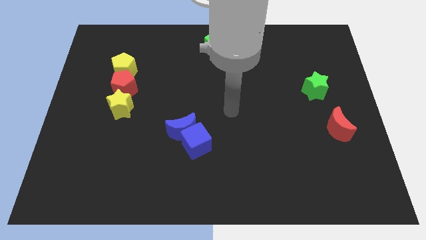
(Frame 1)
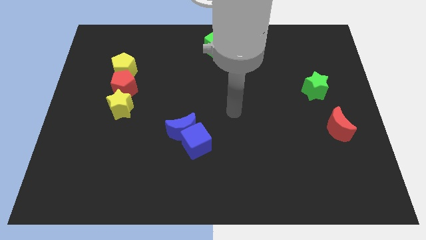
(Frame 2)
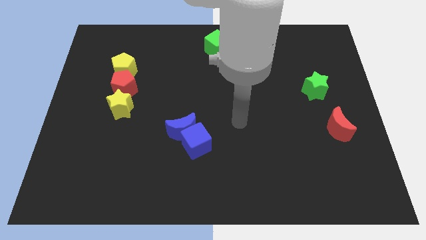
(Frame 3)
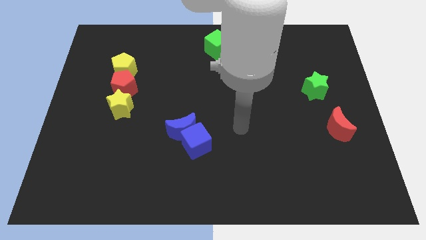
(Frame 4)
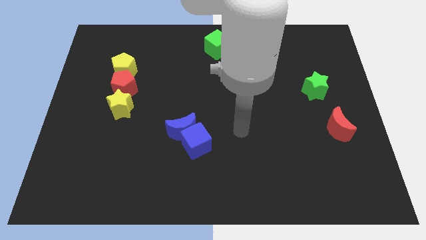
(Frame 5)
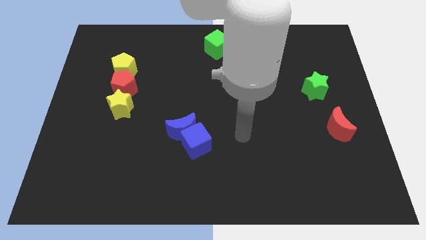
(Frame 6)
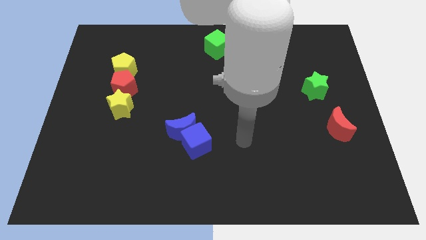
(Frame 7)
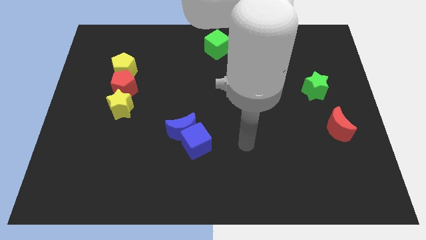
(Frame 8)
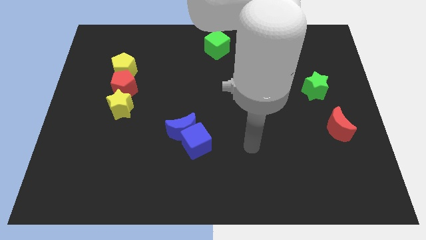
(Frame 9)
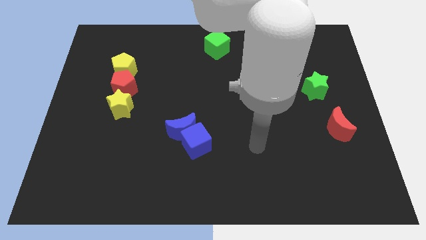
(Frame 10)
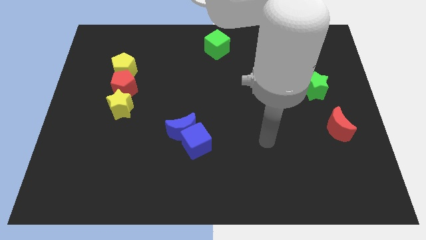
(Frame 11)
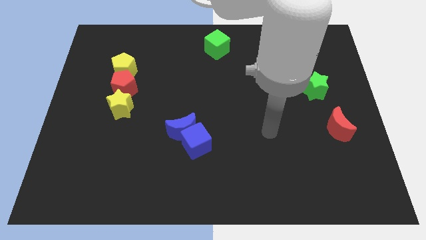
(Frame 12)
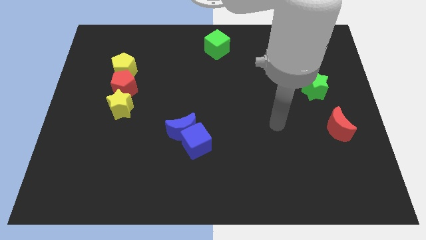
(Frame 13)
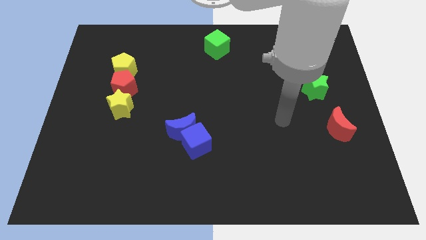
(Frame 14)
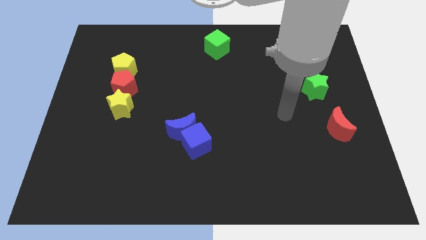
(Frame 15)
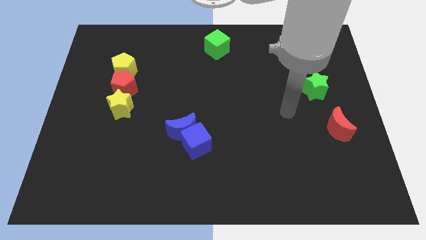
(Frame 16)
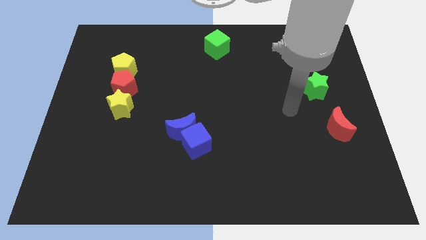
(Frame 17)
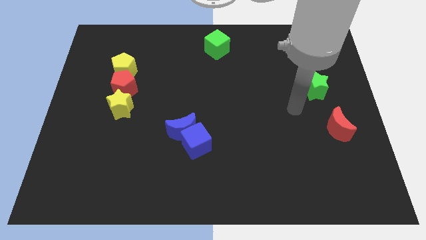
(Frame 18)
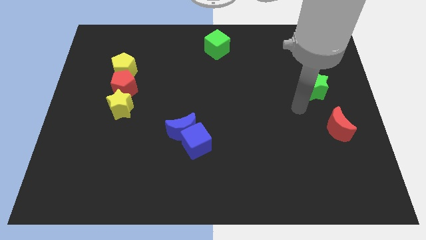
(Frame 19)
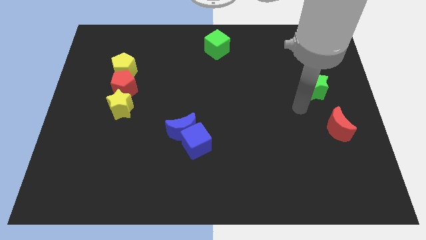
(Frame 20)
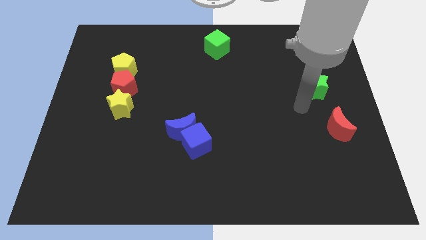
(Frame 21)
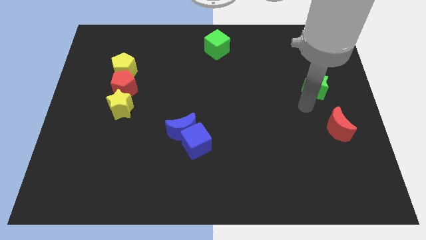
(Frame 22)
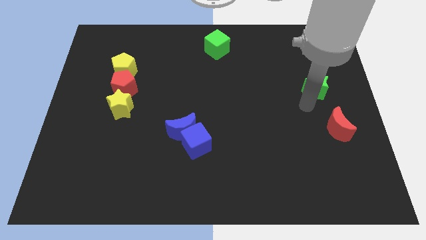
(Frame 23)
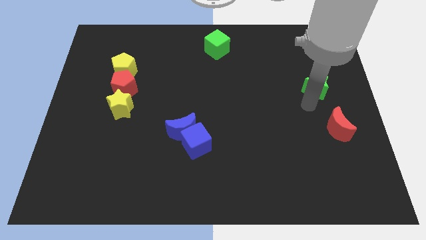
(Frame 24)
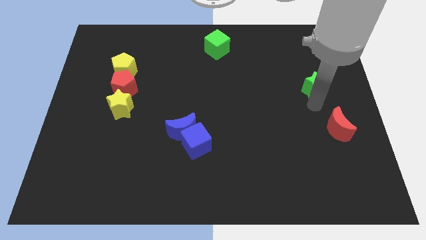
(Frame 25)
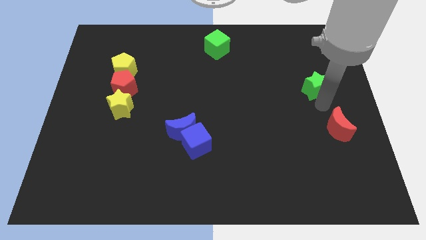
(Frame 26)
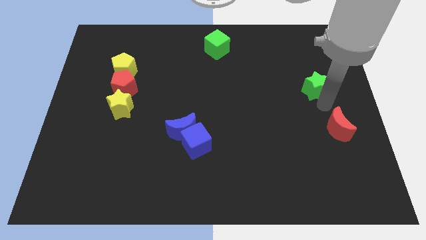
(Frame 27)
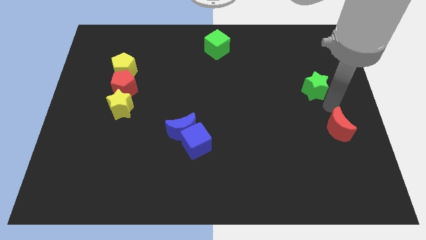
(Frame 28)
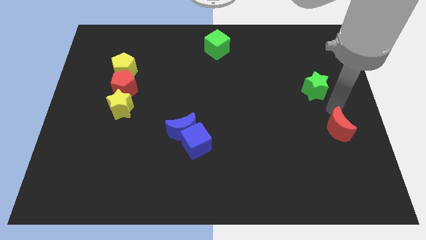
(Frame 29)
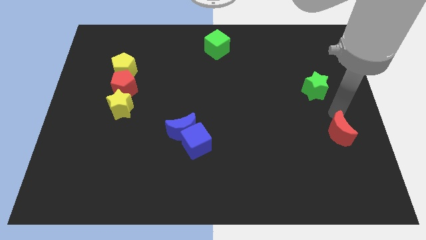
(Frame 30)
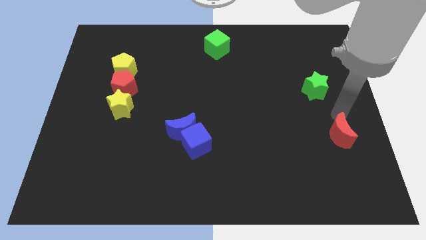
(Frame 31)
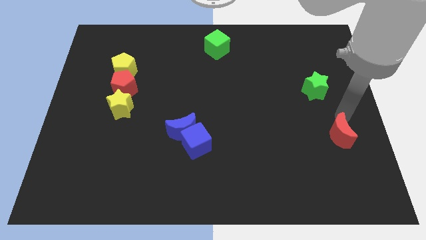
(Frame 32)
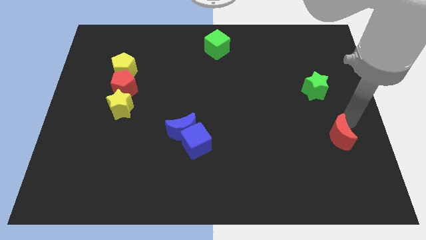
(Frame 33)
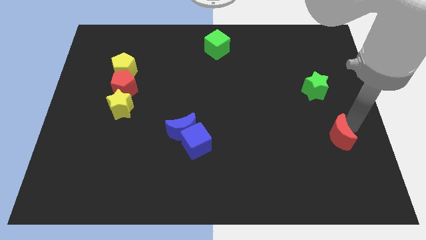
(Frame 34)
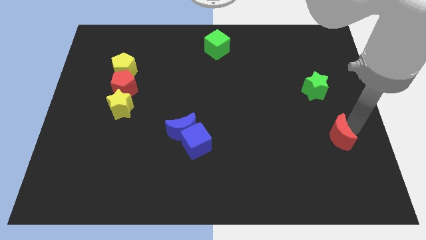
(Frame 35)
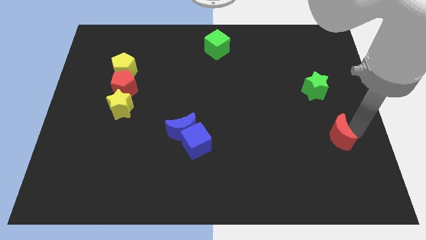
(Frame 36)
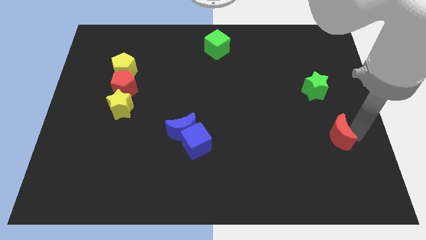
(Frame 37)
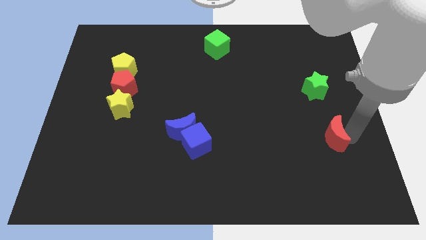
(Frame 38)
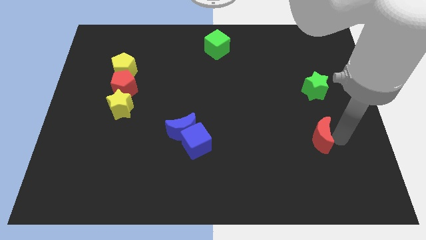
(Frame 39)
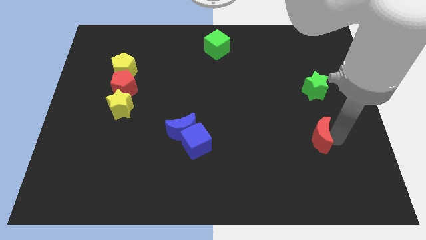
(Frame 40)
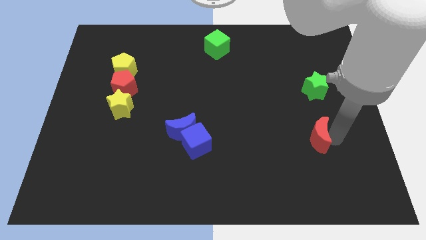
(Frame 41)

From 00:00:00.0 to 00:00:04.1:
slide red moon below green star

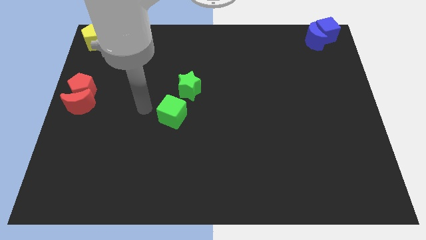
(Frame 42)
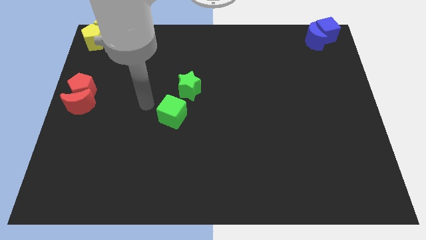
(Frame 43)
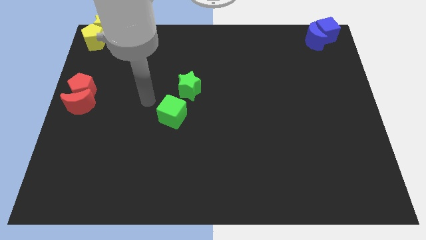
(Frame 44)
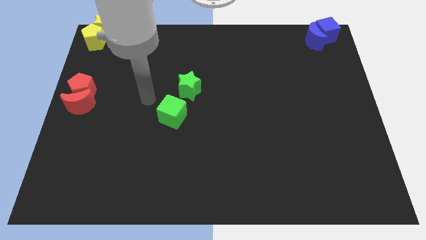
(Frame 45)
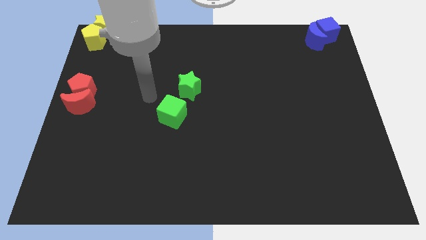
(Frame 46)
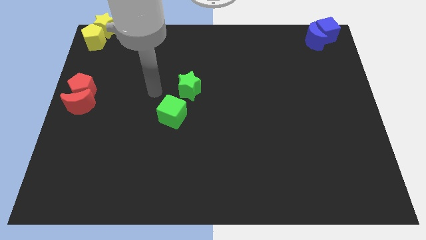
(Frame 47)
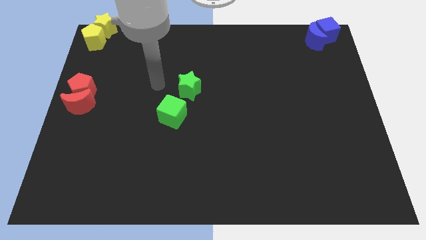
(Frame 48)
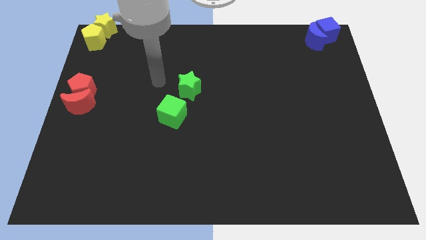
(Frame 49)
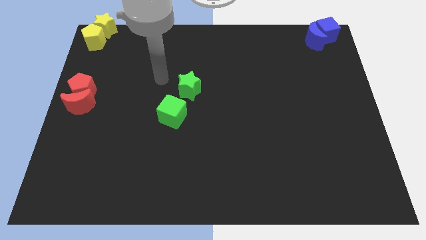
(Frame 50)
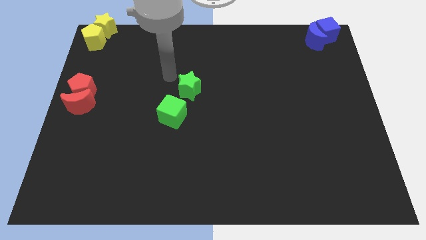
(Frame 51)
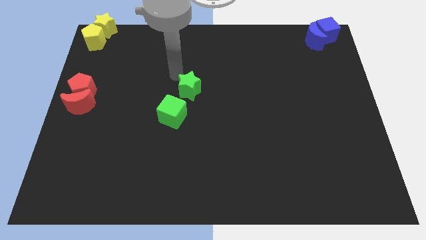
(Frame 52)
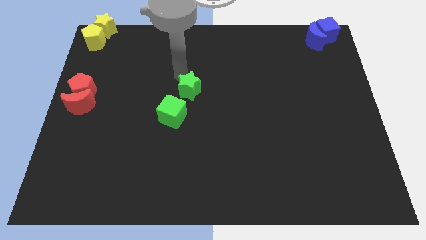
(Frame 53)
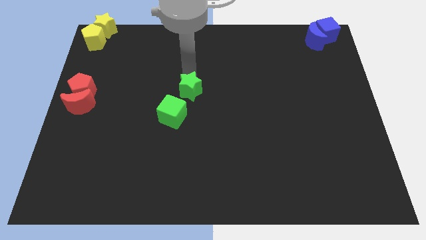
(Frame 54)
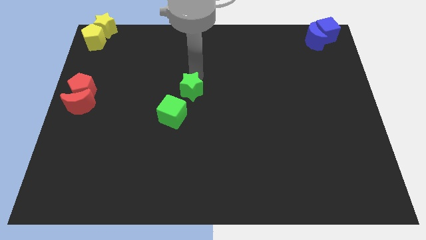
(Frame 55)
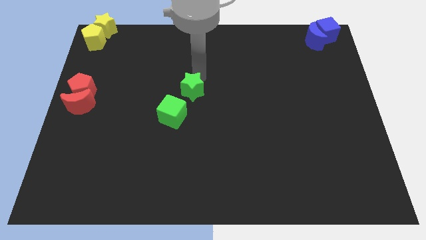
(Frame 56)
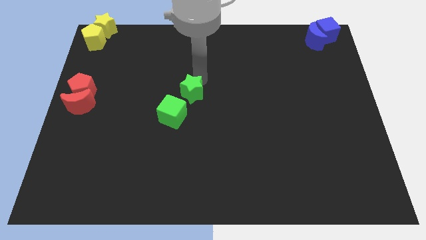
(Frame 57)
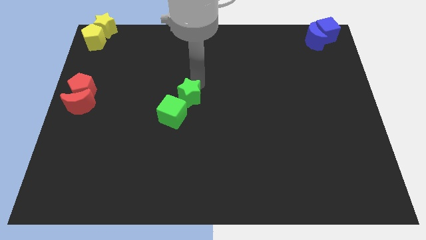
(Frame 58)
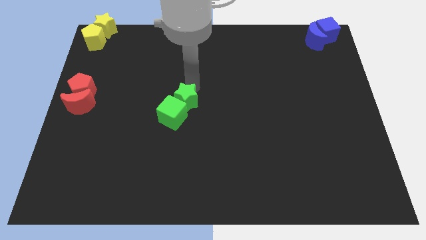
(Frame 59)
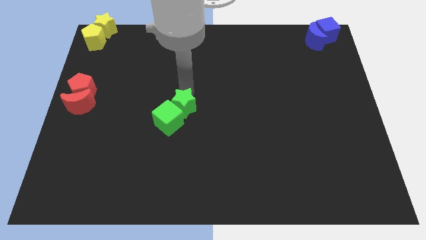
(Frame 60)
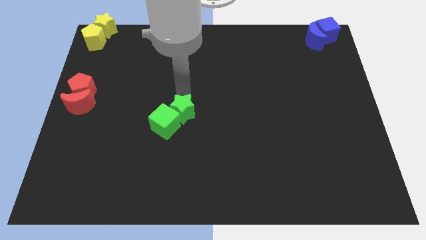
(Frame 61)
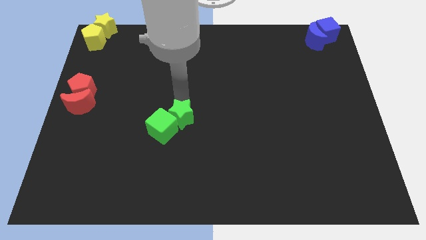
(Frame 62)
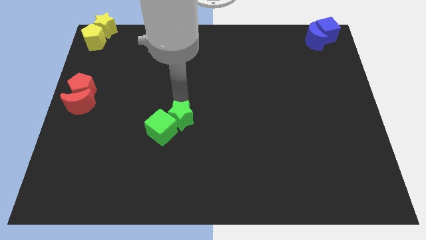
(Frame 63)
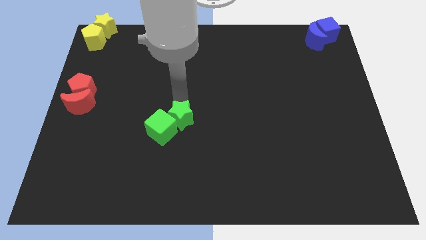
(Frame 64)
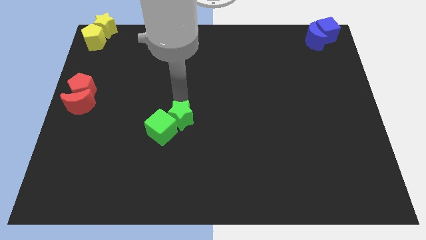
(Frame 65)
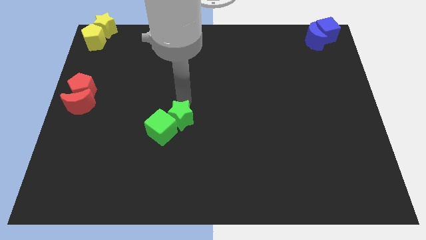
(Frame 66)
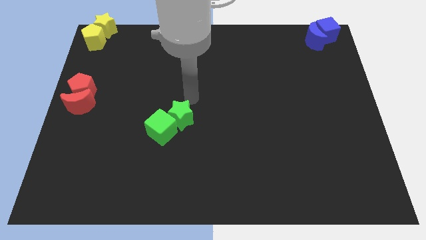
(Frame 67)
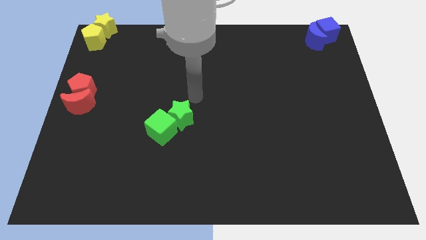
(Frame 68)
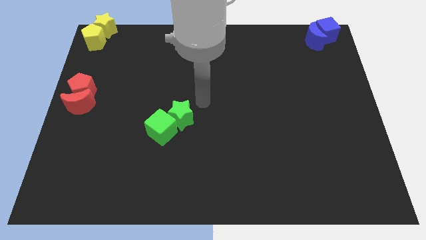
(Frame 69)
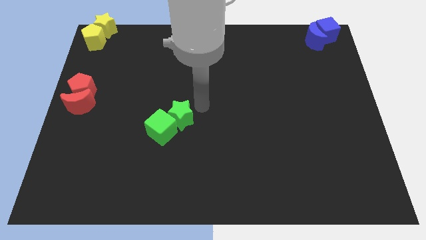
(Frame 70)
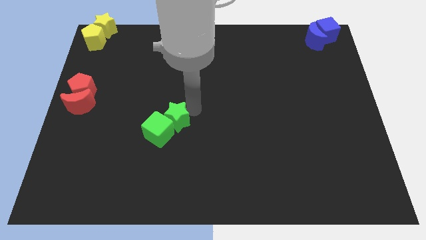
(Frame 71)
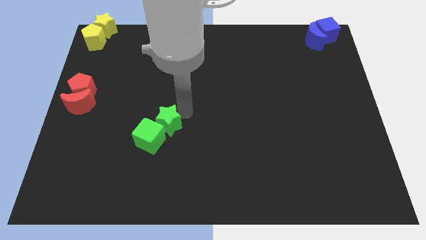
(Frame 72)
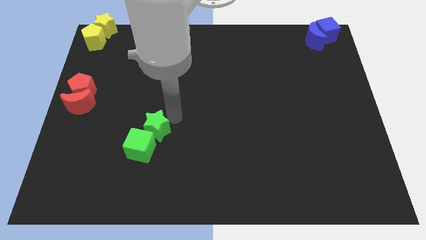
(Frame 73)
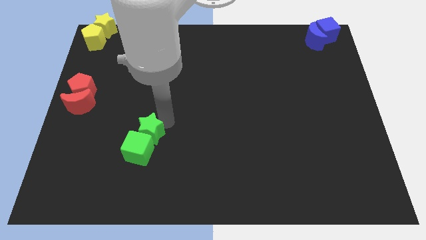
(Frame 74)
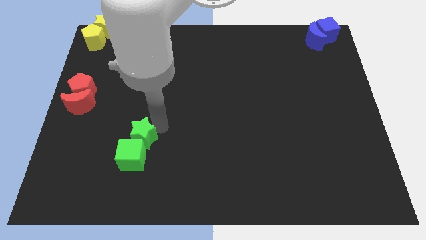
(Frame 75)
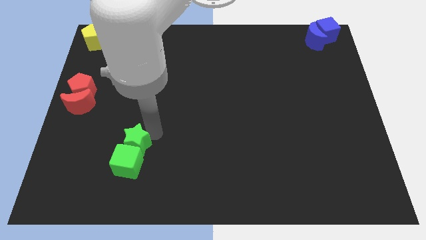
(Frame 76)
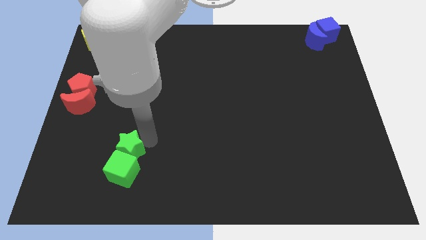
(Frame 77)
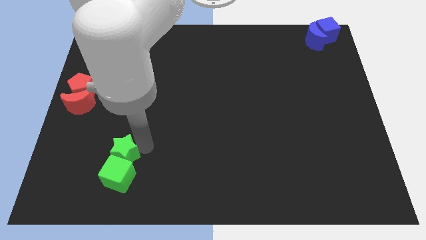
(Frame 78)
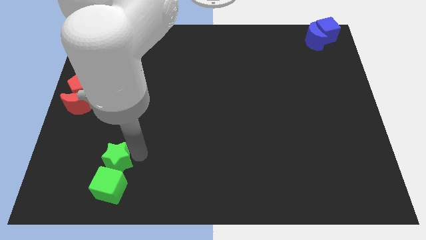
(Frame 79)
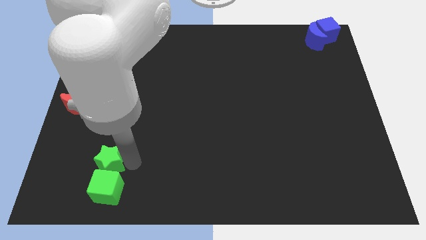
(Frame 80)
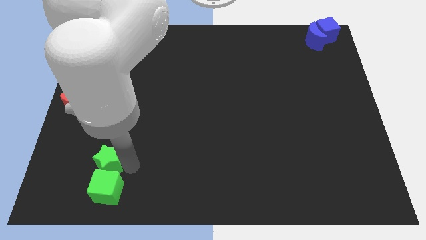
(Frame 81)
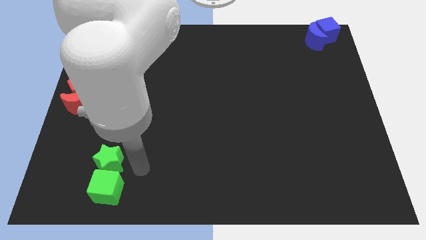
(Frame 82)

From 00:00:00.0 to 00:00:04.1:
move the green star and green cube towards bottom

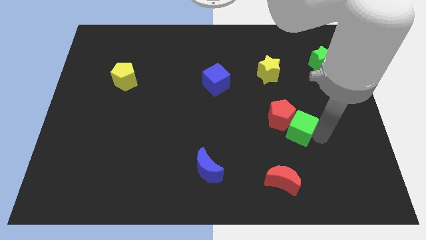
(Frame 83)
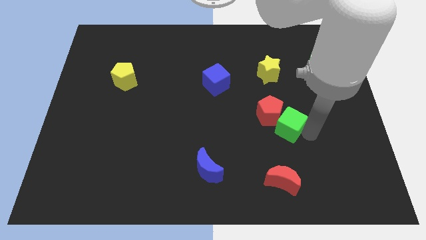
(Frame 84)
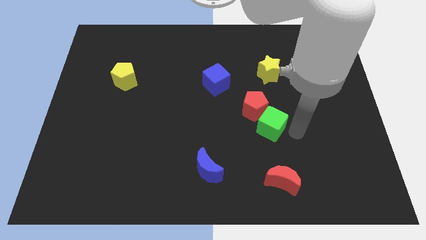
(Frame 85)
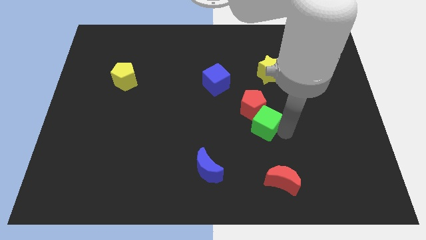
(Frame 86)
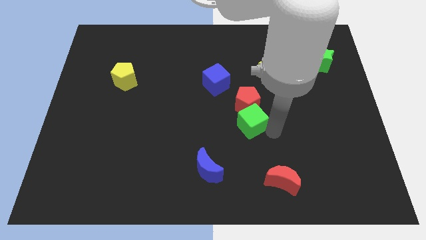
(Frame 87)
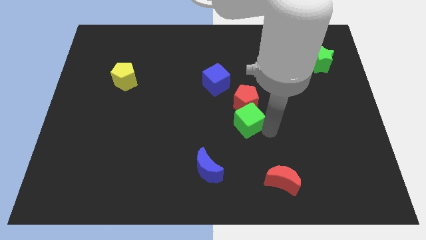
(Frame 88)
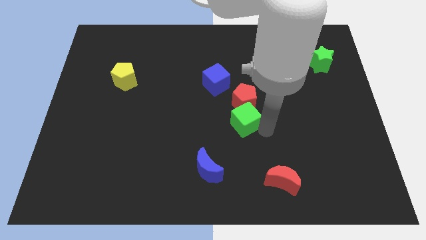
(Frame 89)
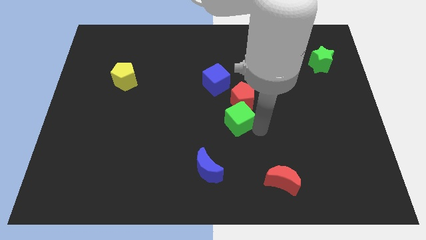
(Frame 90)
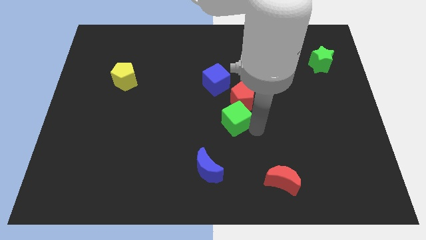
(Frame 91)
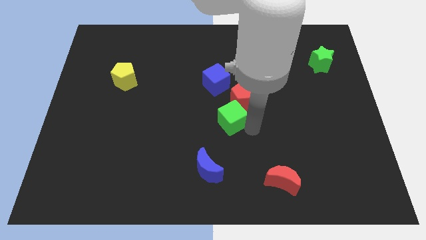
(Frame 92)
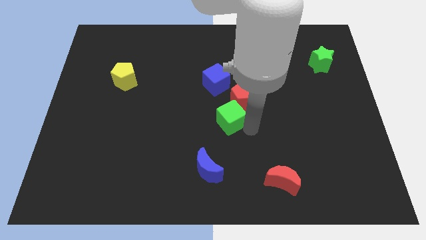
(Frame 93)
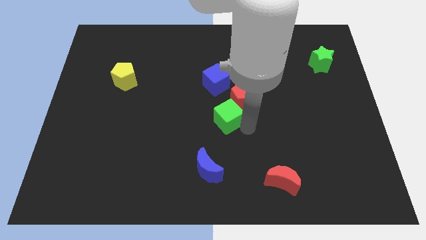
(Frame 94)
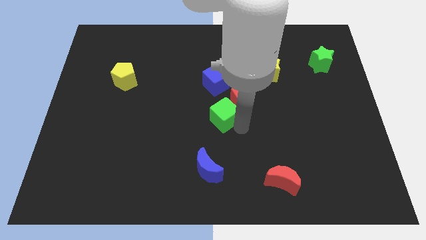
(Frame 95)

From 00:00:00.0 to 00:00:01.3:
push the green cube bottom left to the red pentagon
